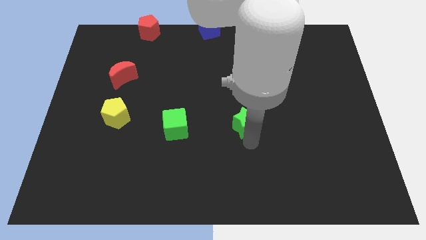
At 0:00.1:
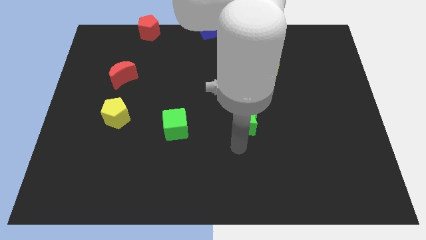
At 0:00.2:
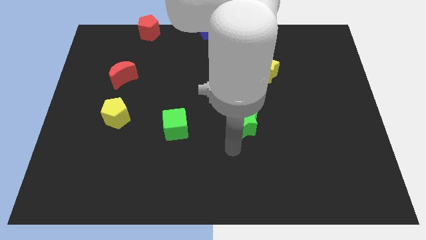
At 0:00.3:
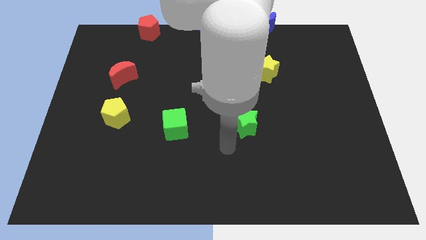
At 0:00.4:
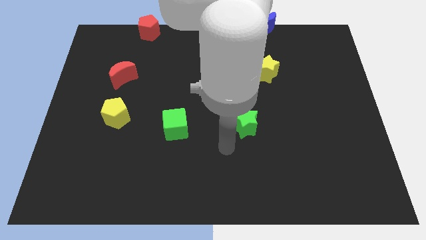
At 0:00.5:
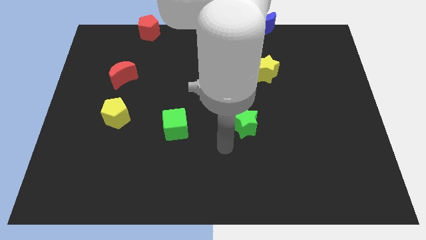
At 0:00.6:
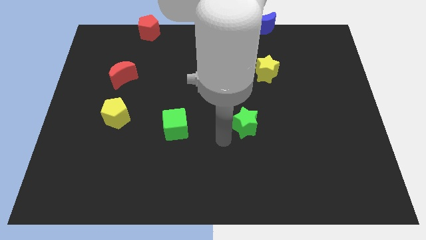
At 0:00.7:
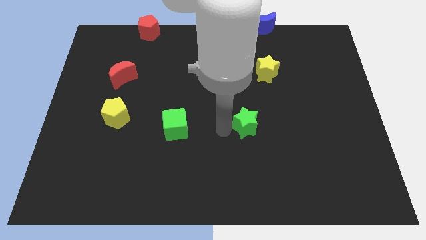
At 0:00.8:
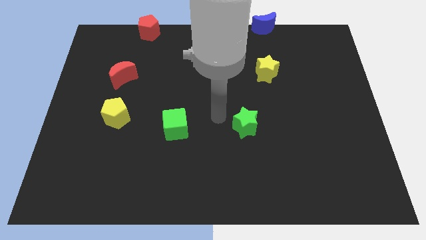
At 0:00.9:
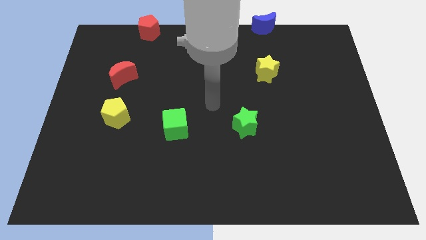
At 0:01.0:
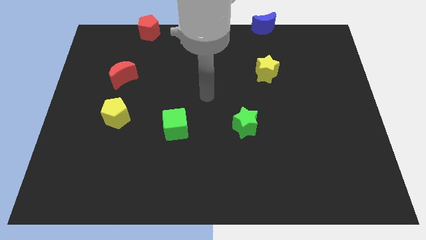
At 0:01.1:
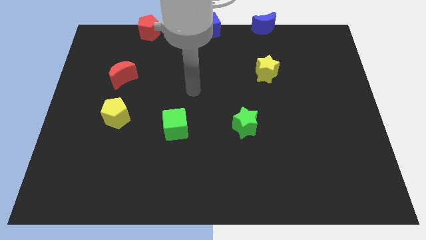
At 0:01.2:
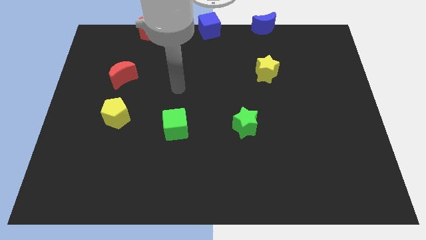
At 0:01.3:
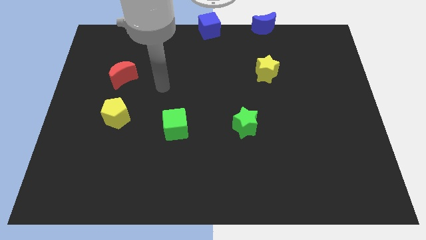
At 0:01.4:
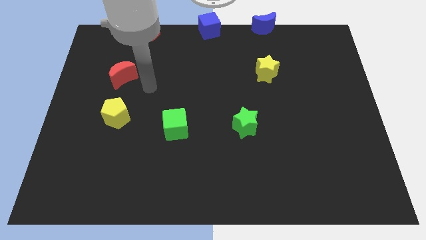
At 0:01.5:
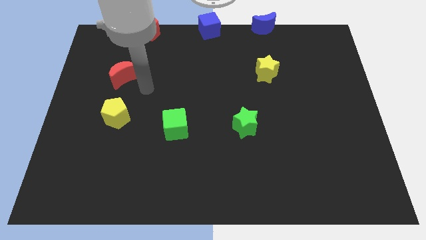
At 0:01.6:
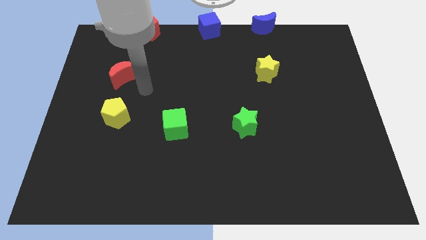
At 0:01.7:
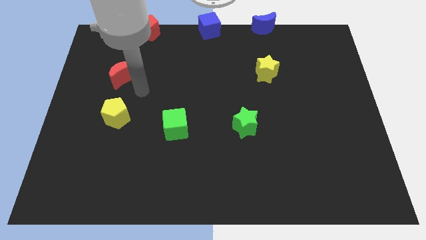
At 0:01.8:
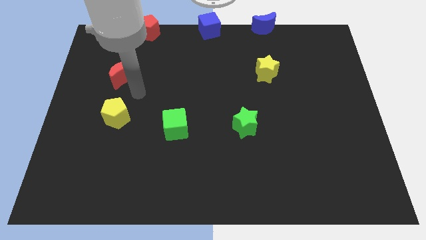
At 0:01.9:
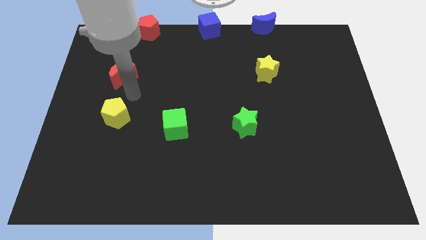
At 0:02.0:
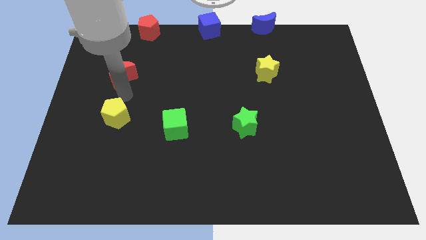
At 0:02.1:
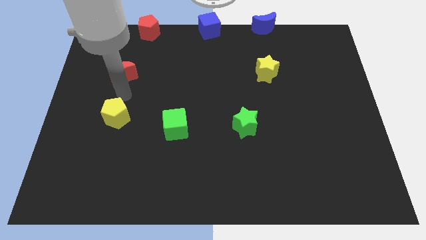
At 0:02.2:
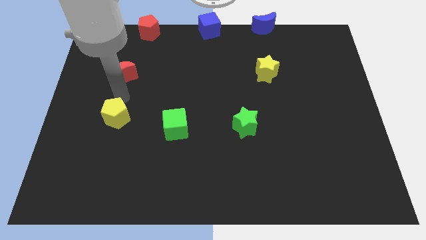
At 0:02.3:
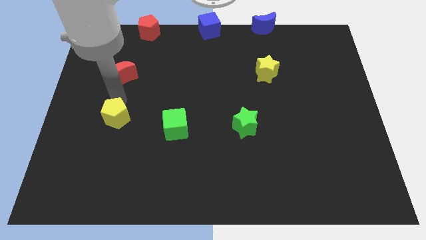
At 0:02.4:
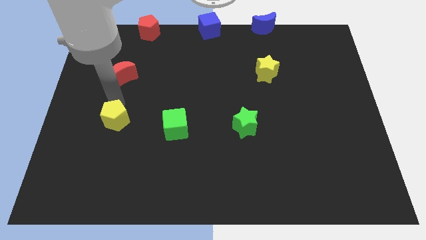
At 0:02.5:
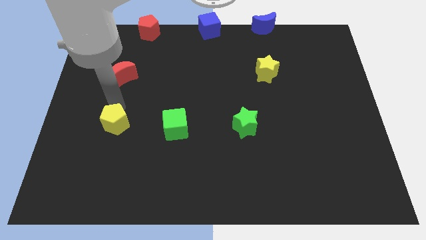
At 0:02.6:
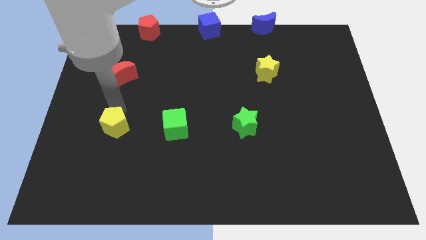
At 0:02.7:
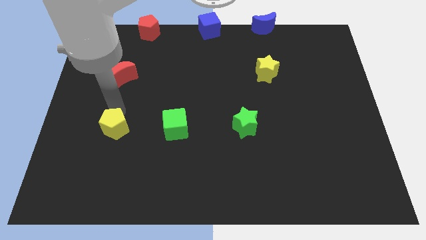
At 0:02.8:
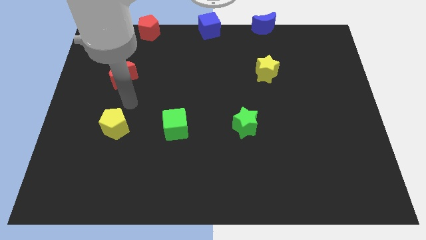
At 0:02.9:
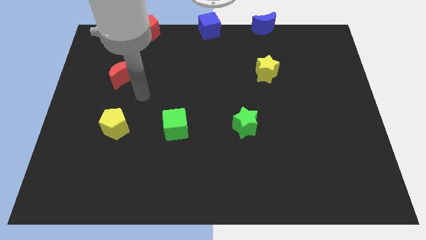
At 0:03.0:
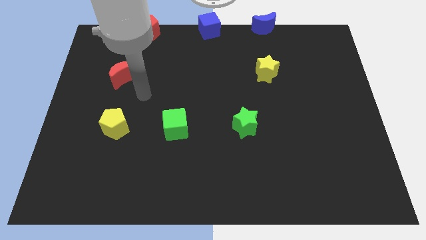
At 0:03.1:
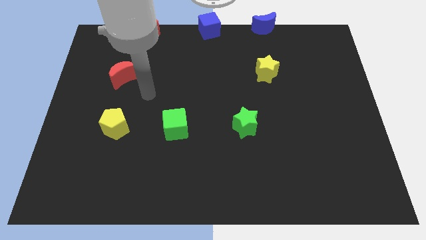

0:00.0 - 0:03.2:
place the yellow pentagon to the left of green cube

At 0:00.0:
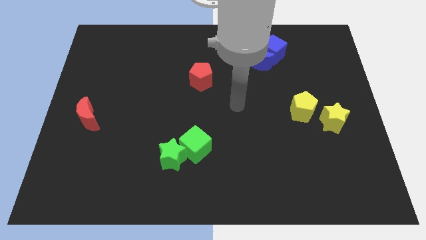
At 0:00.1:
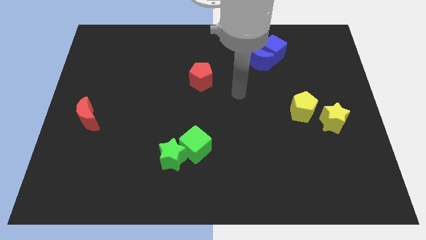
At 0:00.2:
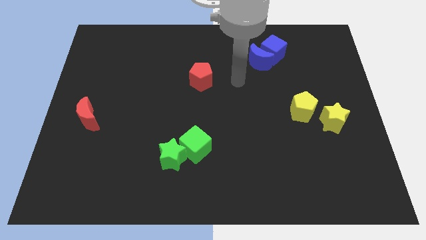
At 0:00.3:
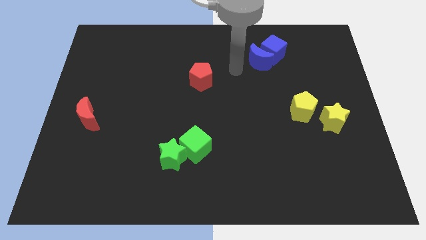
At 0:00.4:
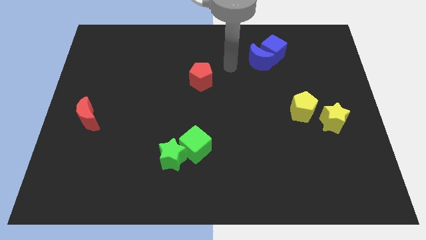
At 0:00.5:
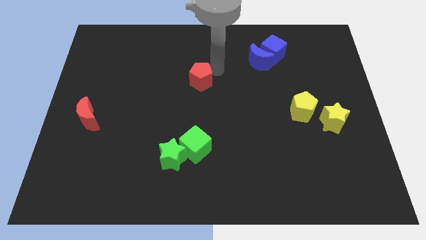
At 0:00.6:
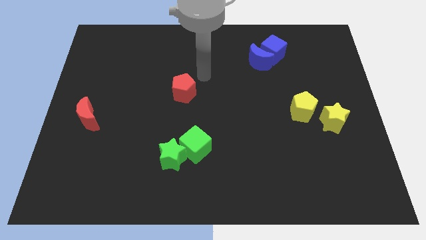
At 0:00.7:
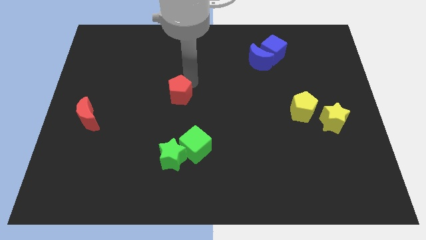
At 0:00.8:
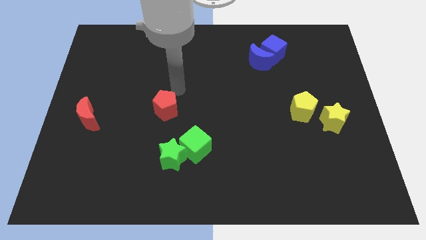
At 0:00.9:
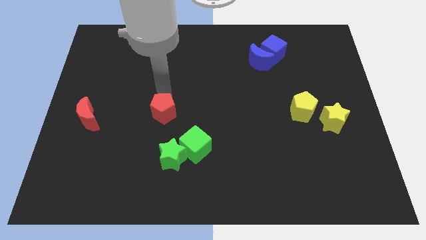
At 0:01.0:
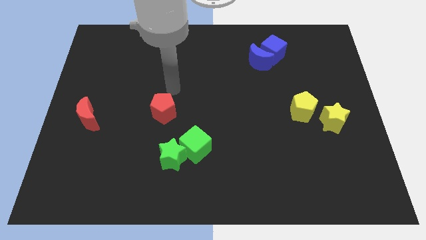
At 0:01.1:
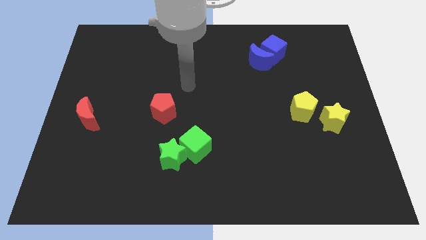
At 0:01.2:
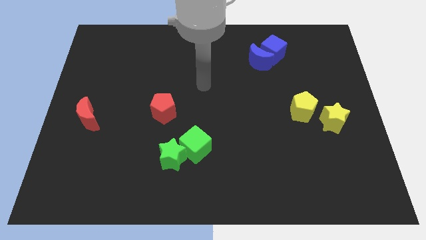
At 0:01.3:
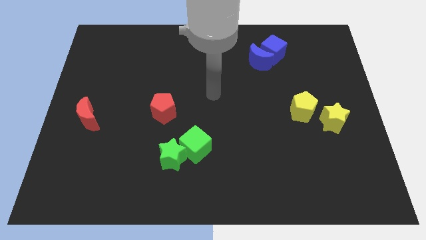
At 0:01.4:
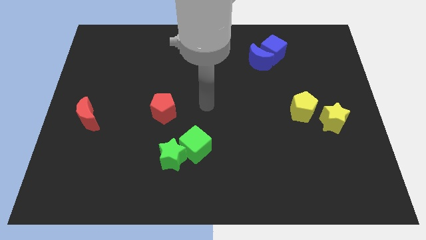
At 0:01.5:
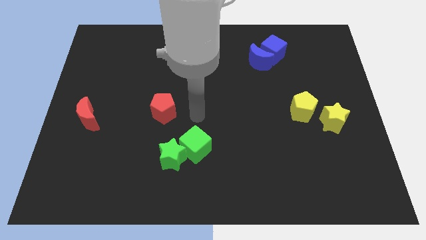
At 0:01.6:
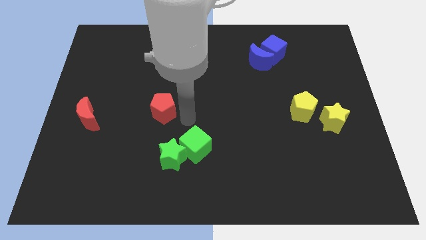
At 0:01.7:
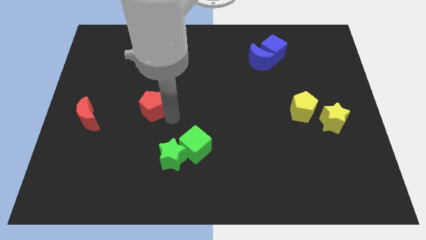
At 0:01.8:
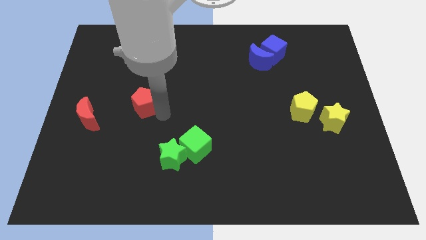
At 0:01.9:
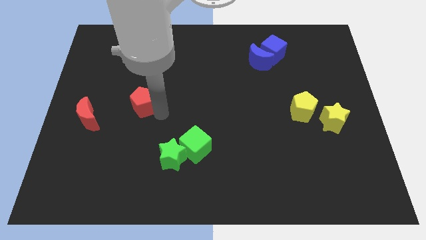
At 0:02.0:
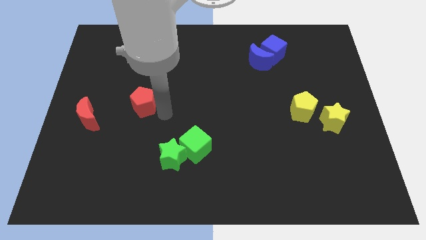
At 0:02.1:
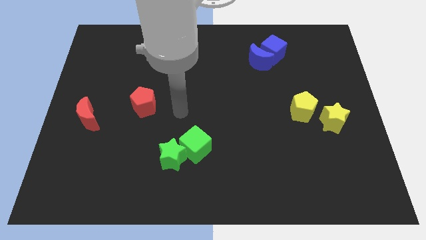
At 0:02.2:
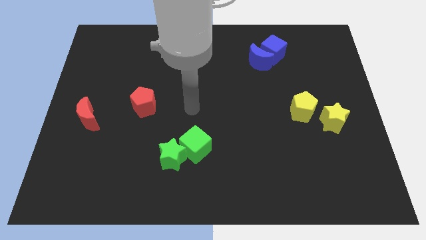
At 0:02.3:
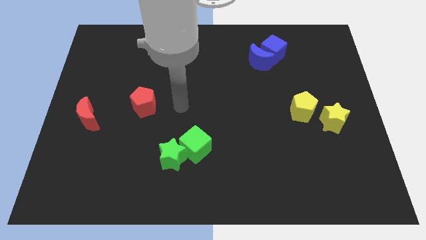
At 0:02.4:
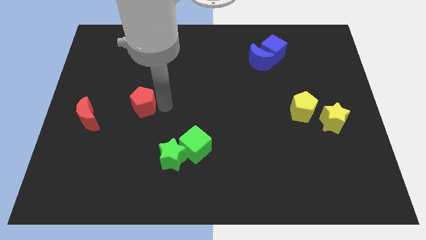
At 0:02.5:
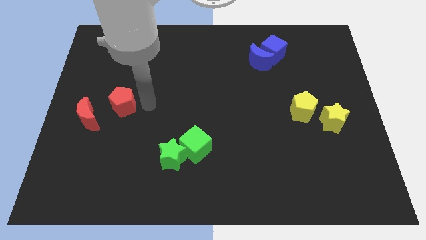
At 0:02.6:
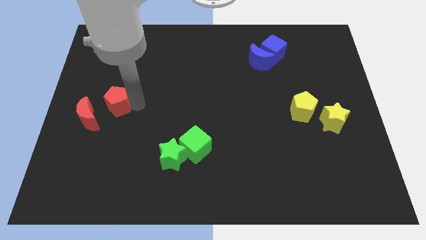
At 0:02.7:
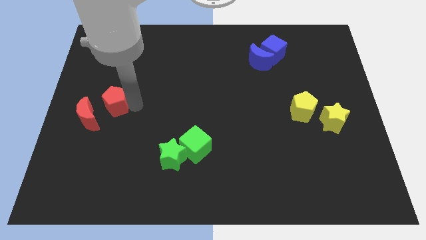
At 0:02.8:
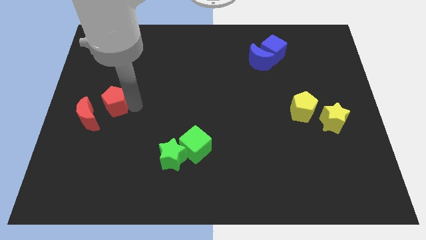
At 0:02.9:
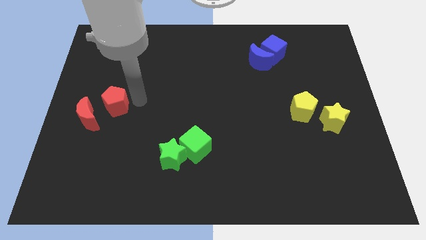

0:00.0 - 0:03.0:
move the red pentagon close to the red moon

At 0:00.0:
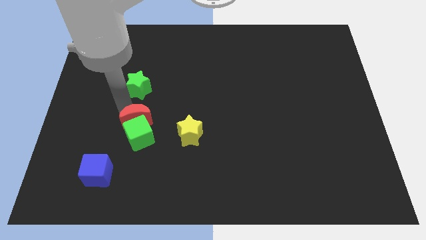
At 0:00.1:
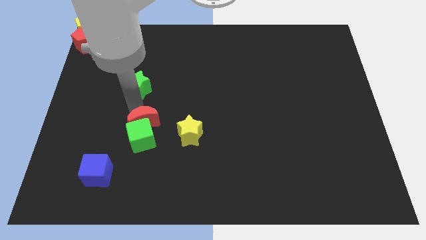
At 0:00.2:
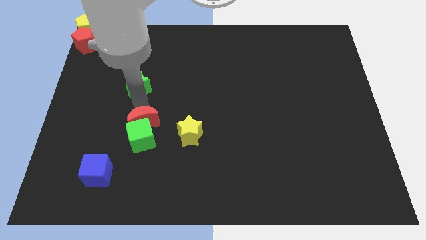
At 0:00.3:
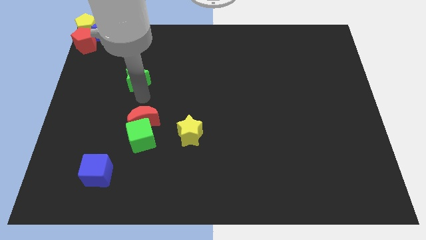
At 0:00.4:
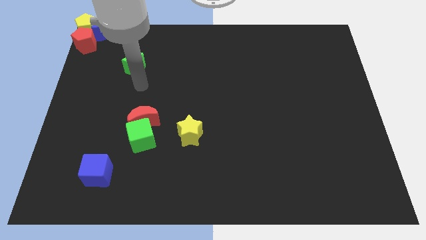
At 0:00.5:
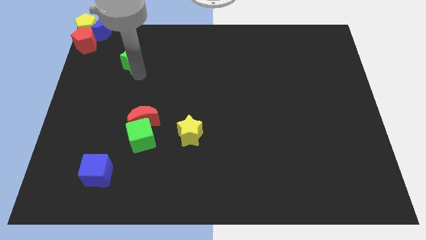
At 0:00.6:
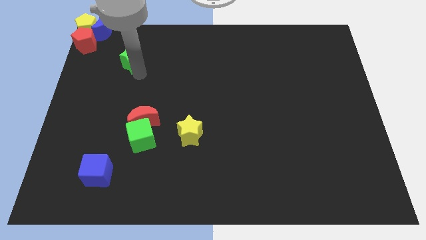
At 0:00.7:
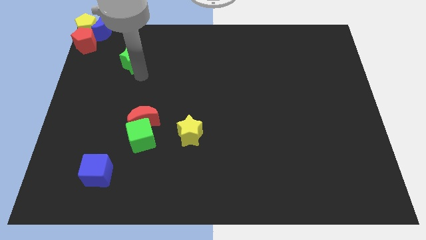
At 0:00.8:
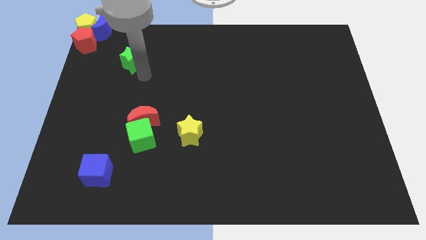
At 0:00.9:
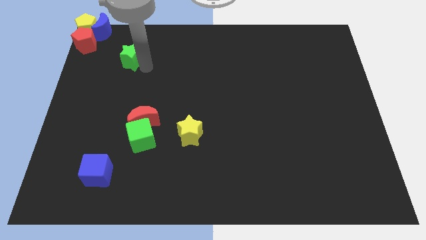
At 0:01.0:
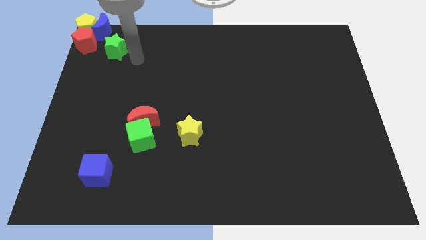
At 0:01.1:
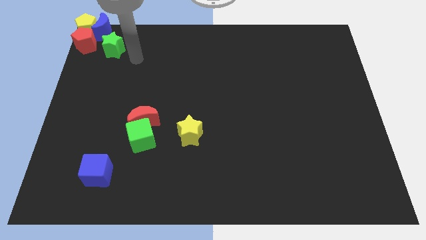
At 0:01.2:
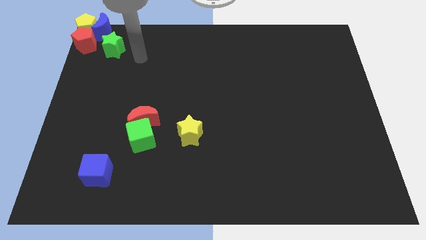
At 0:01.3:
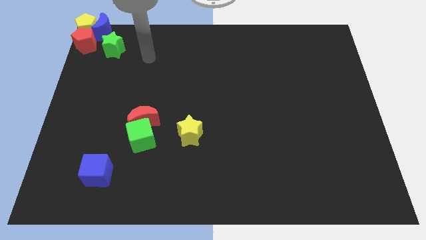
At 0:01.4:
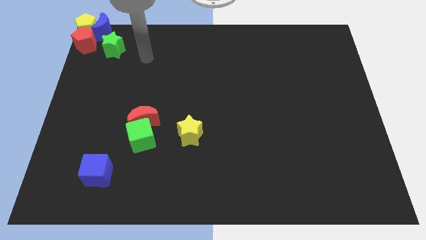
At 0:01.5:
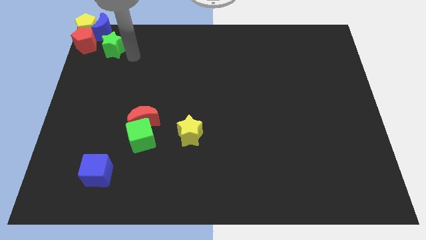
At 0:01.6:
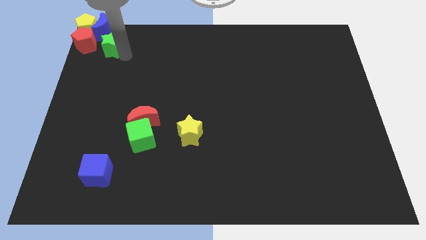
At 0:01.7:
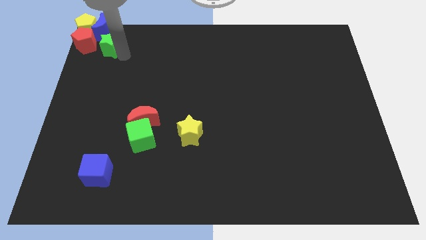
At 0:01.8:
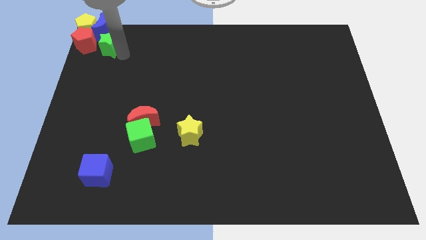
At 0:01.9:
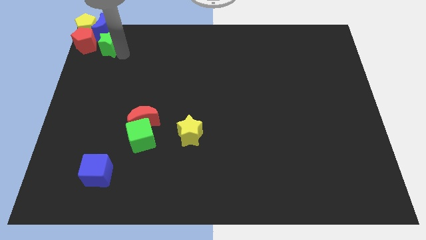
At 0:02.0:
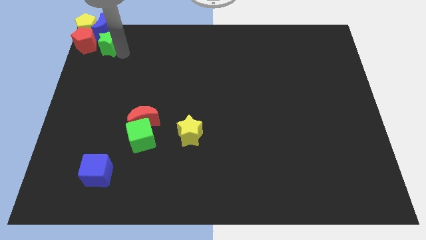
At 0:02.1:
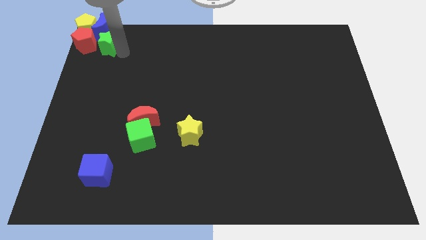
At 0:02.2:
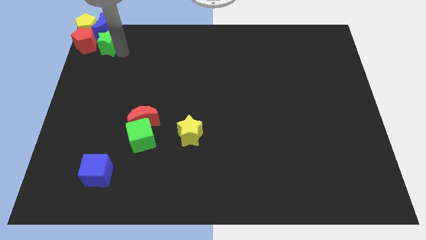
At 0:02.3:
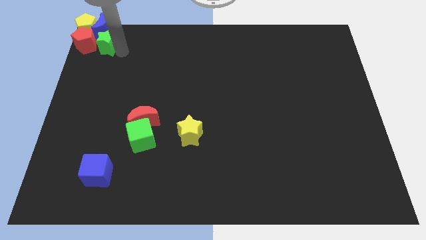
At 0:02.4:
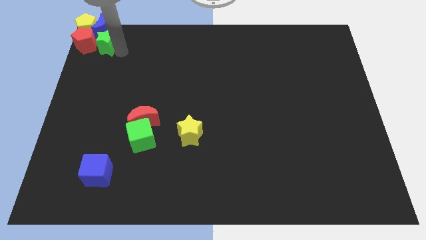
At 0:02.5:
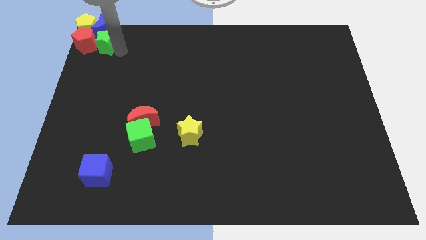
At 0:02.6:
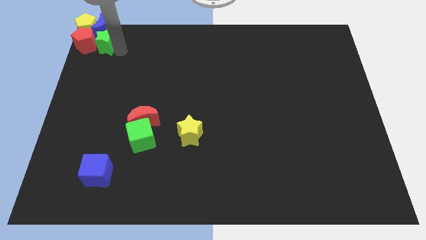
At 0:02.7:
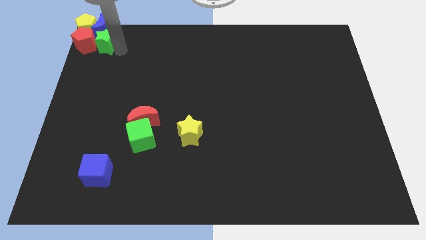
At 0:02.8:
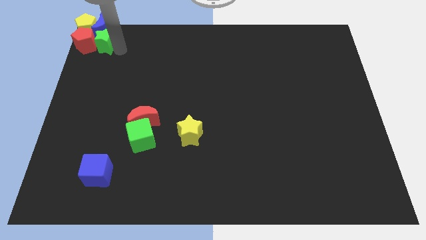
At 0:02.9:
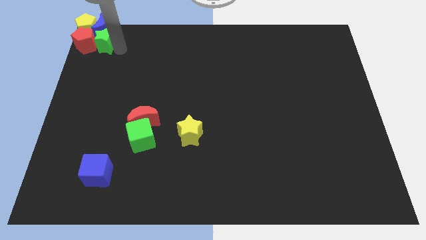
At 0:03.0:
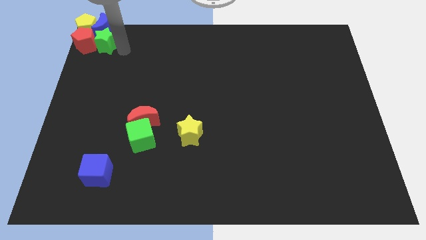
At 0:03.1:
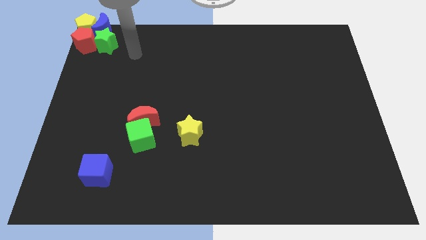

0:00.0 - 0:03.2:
push the green star into the blue crescent
